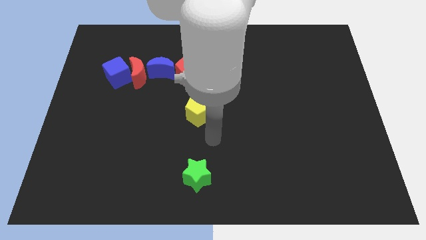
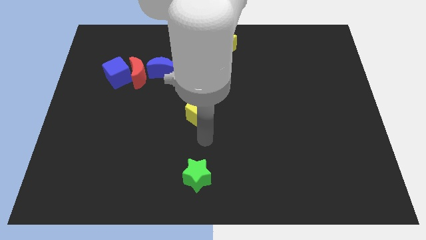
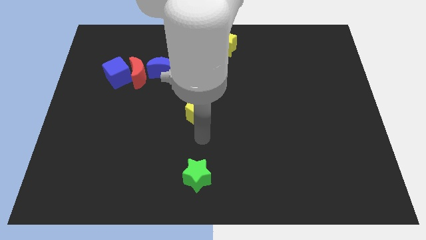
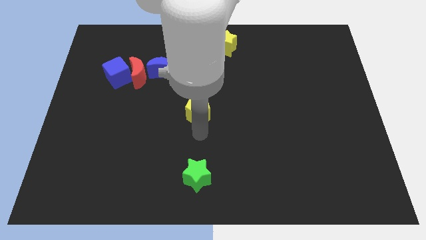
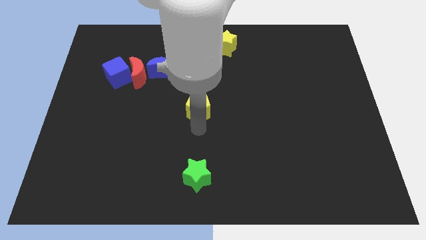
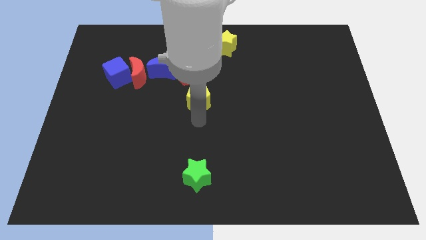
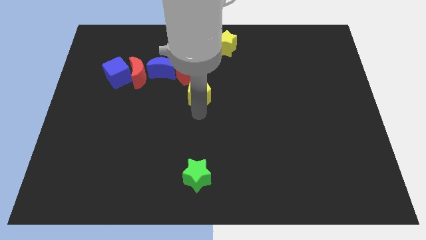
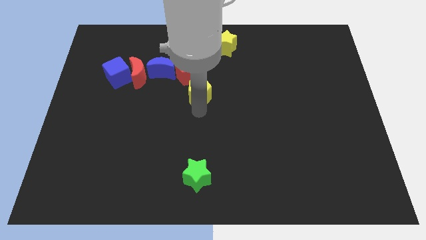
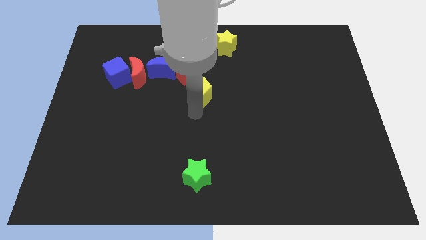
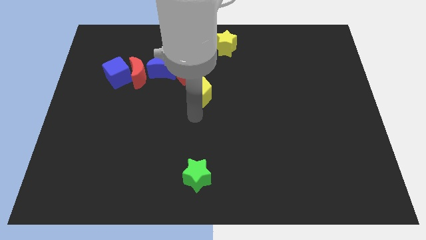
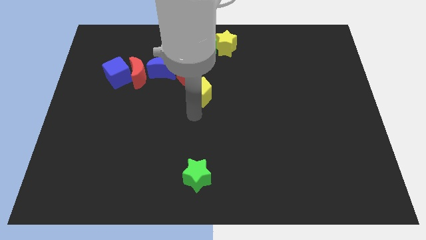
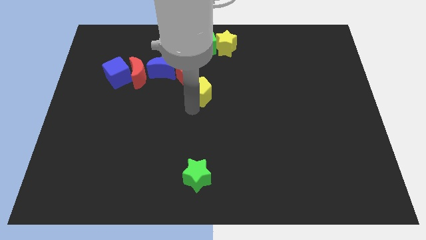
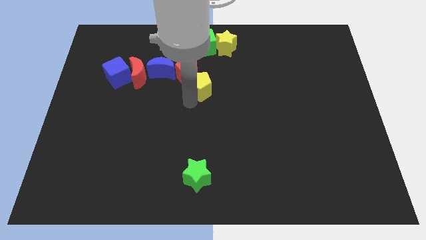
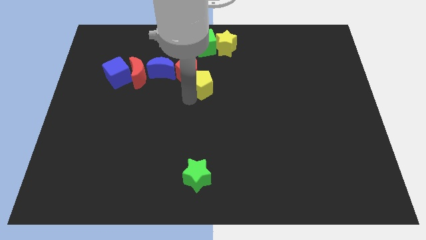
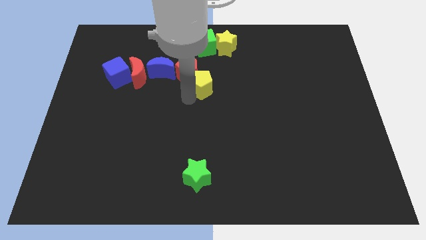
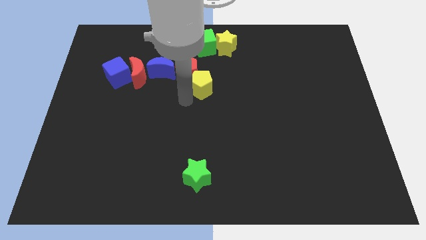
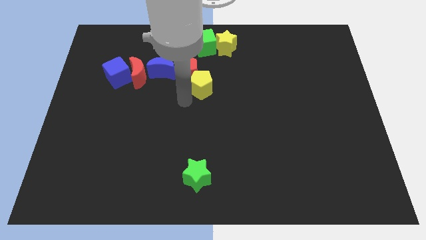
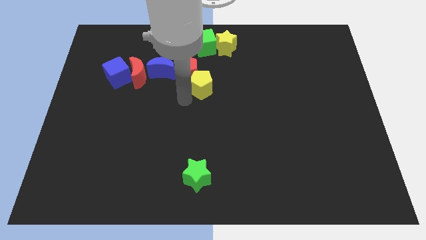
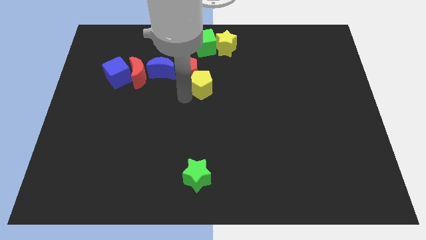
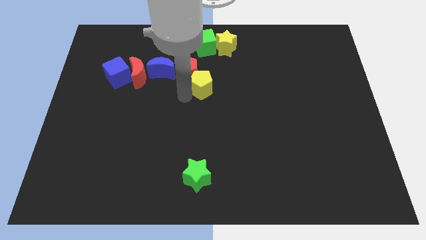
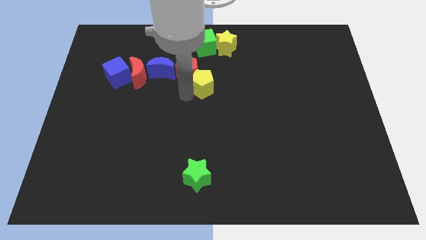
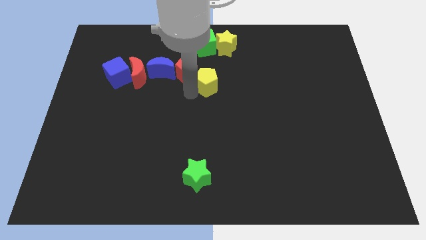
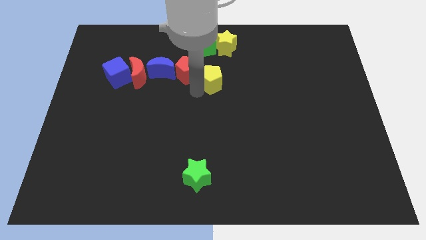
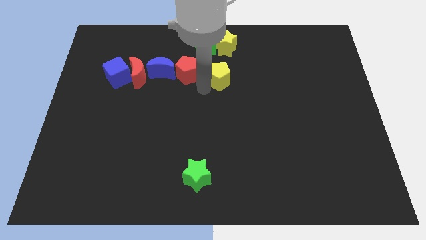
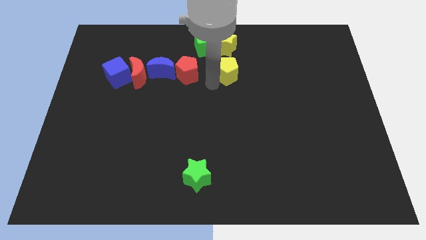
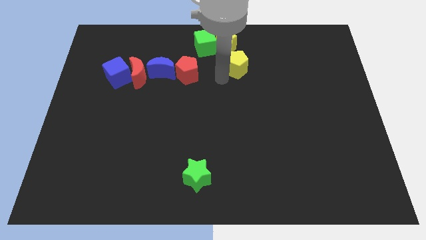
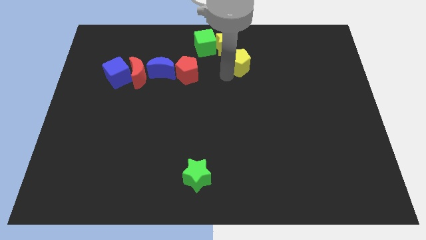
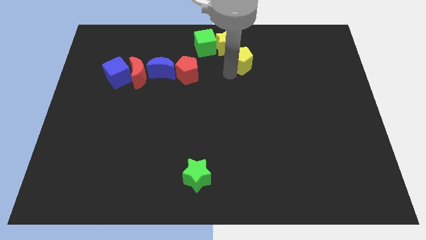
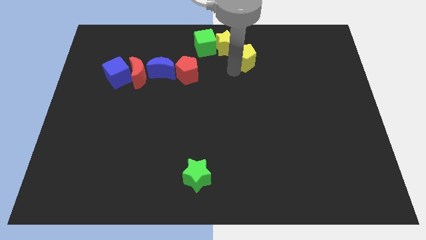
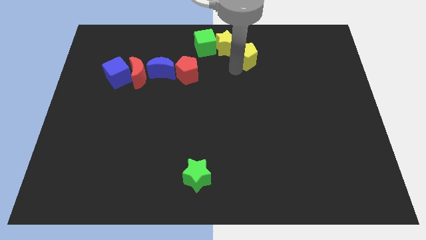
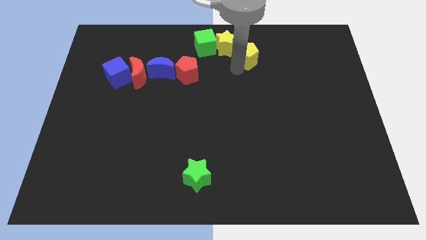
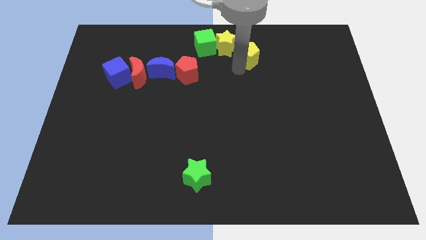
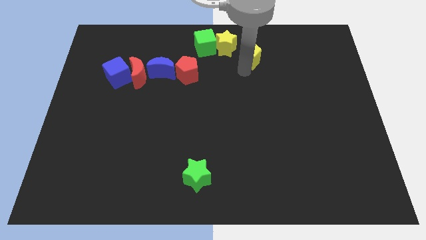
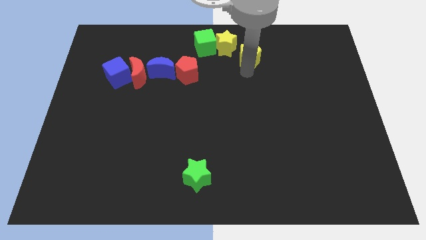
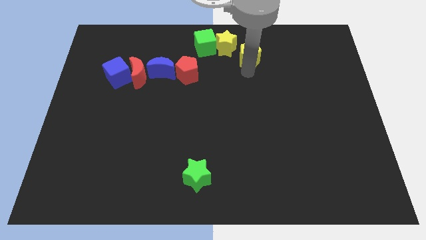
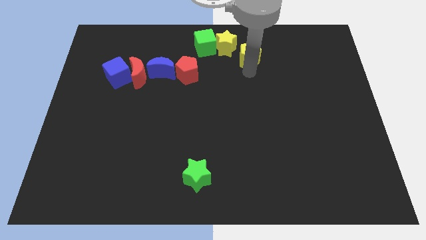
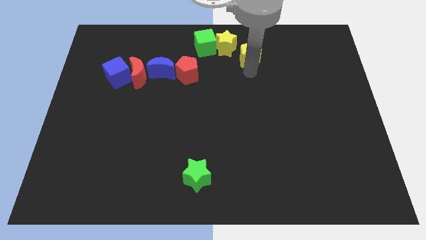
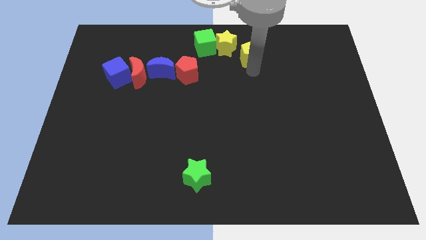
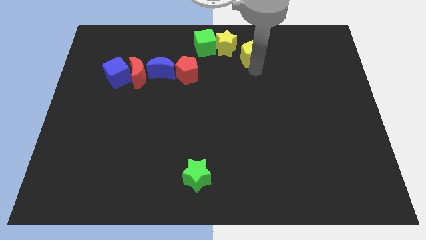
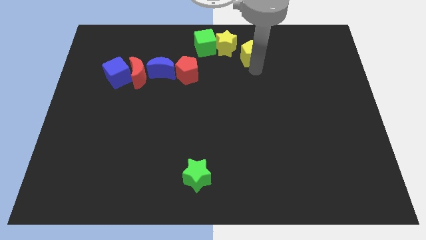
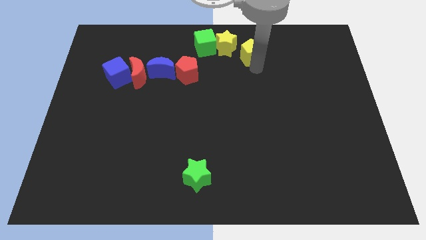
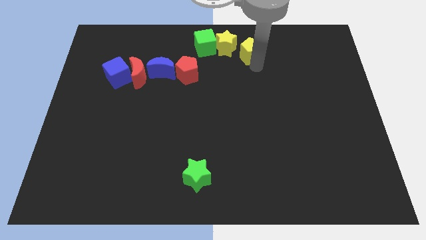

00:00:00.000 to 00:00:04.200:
push the yellow pentagon to the bottom right side of the yellow star

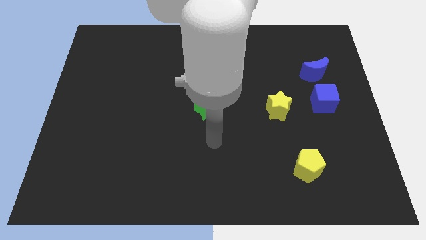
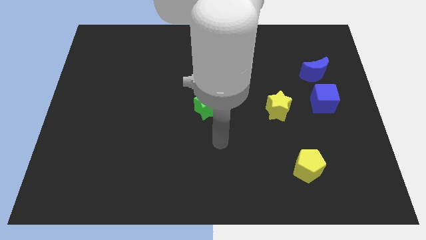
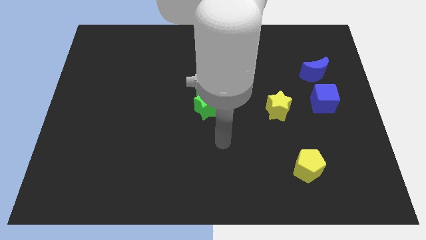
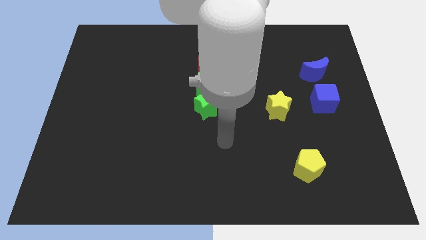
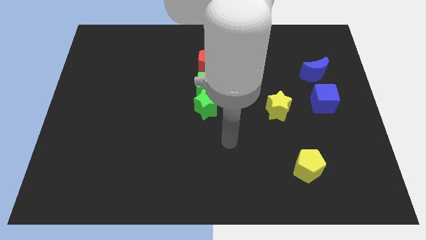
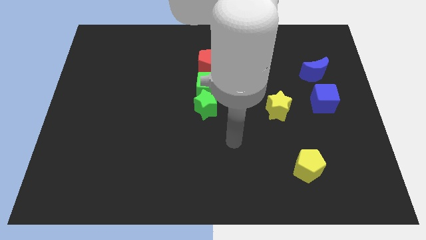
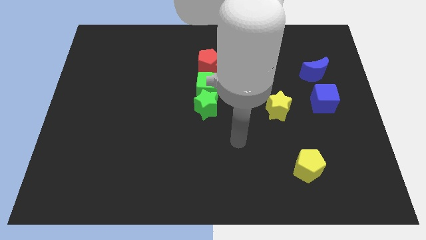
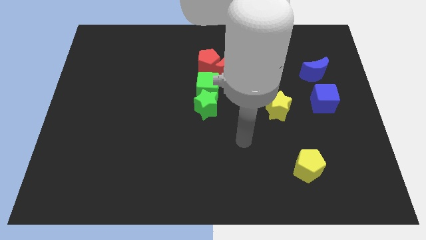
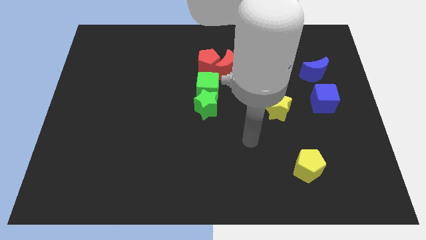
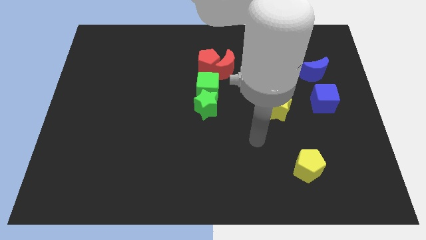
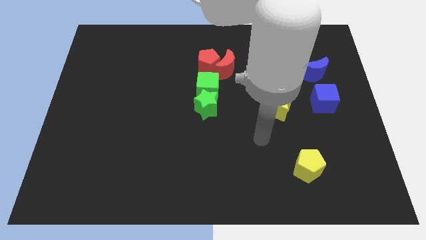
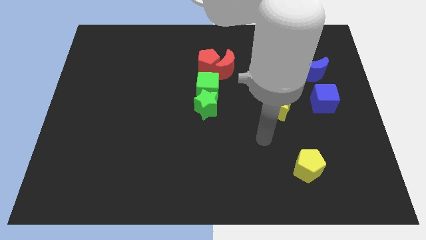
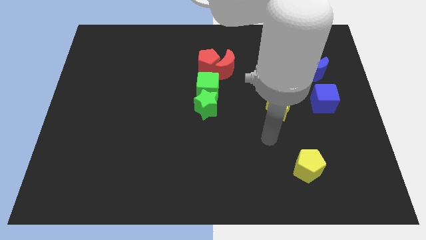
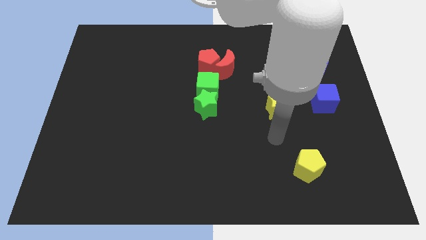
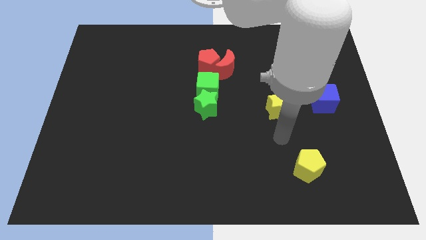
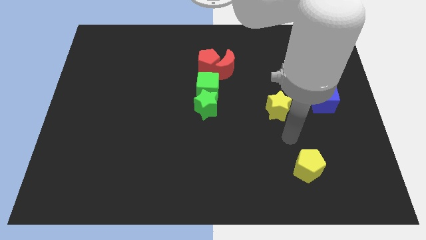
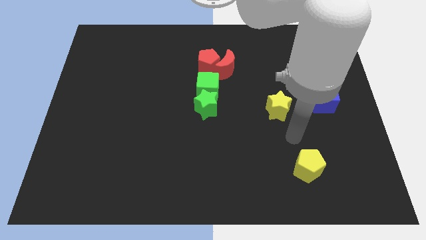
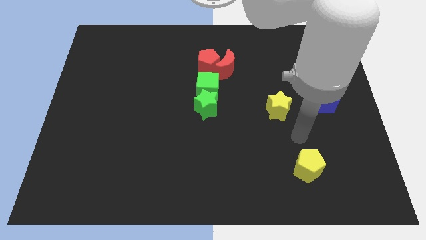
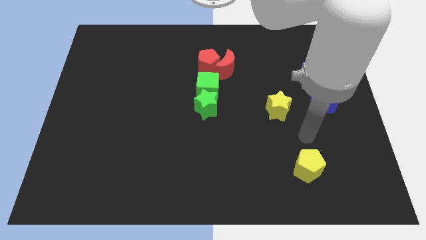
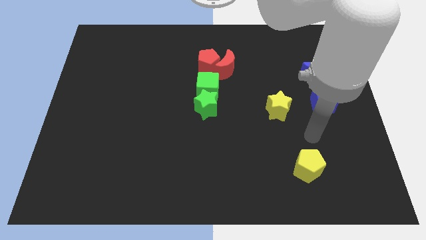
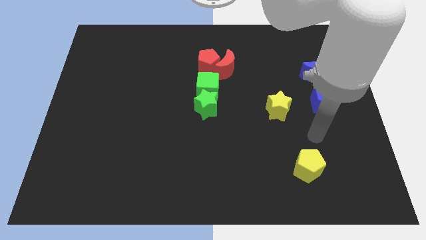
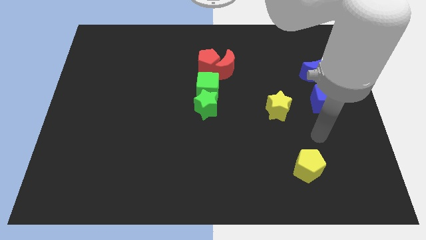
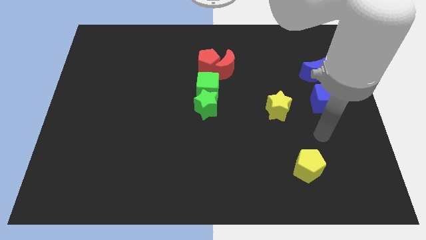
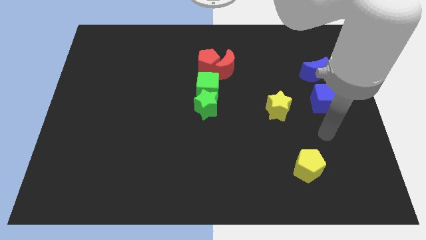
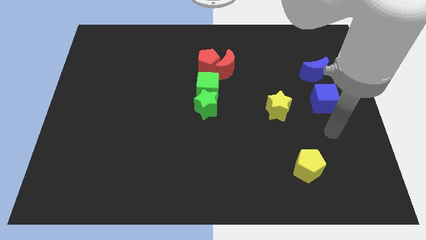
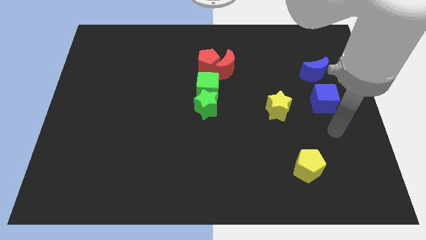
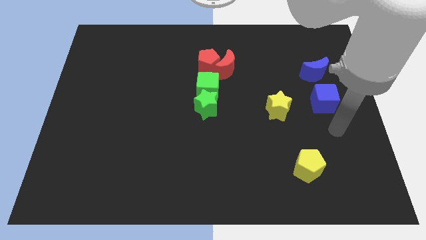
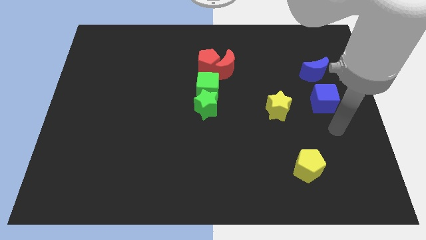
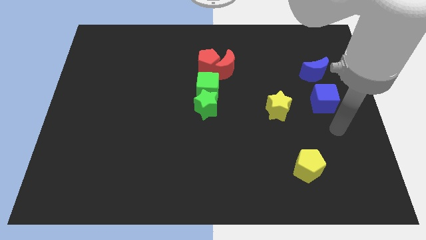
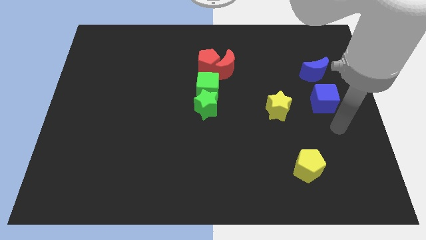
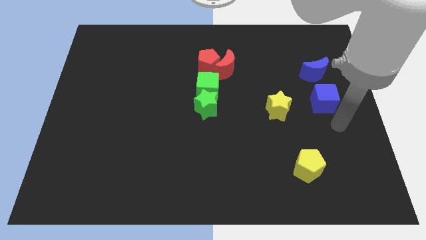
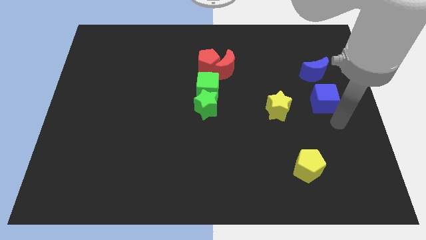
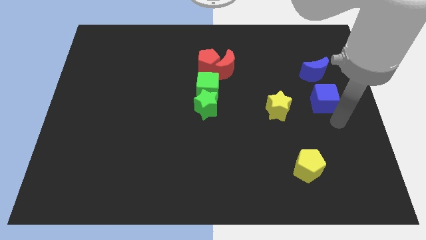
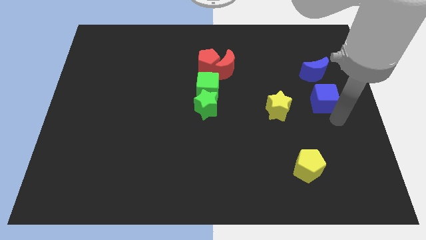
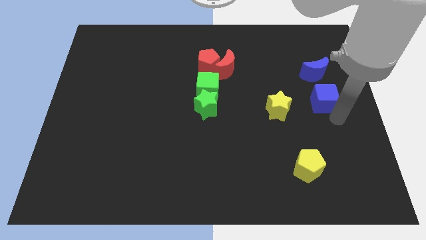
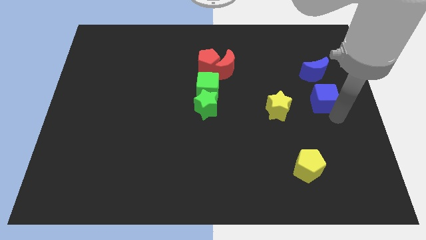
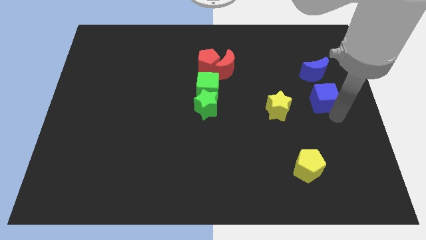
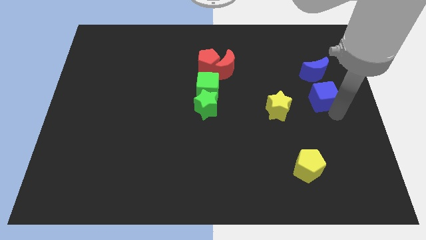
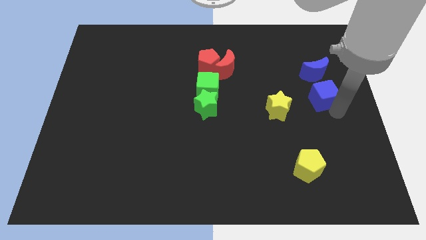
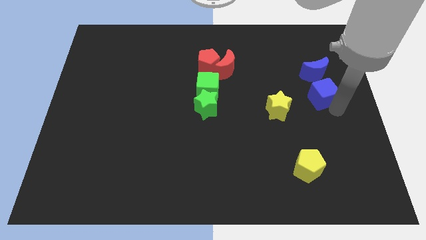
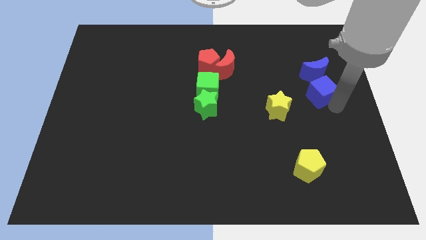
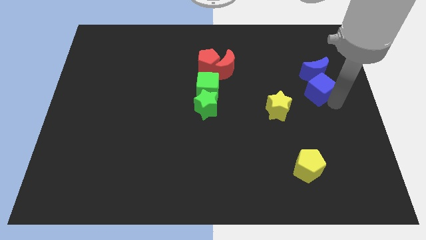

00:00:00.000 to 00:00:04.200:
push the blue cube towards the blue crescent

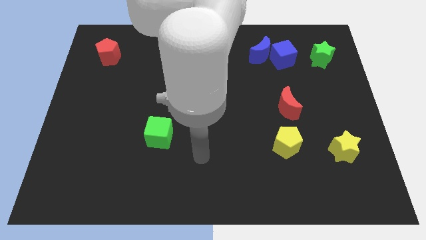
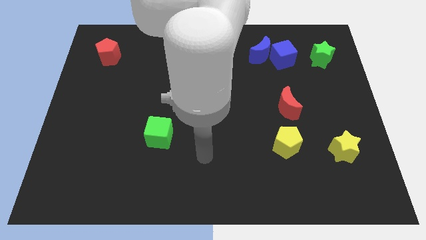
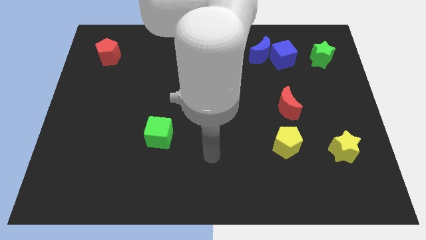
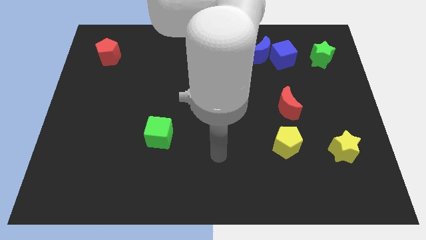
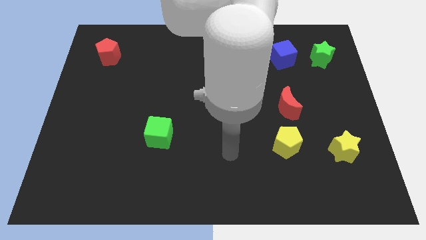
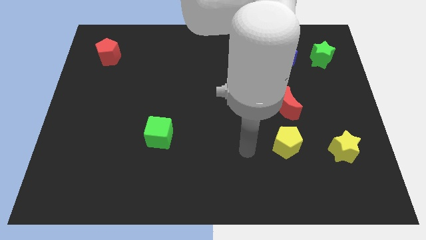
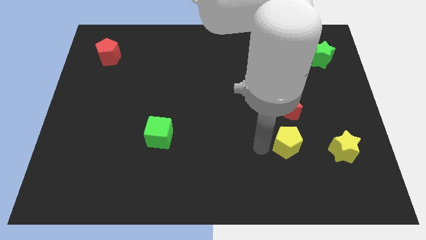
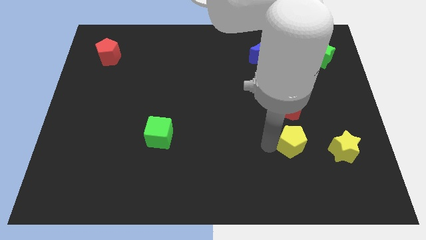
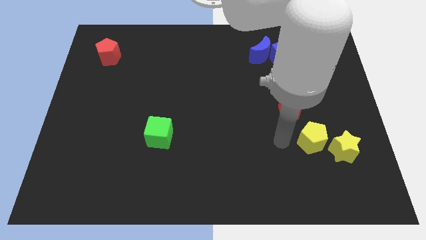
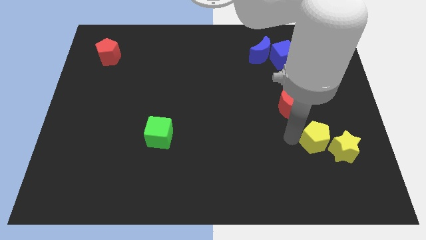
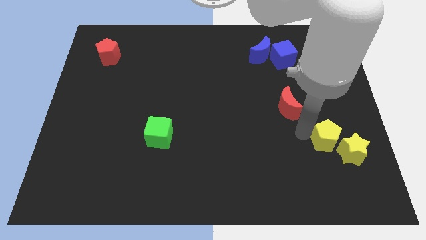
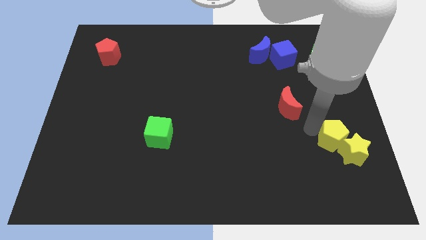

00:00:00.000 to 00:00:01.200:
push the yellow pentagon into yellow star
